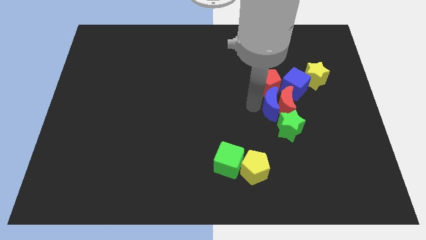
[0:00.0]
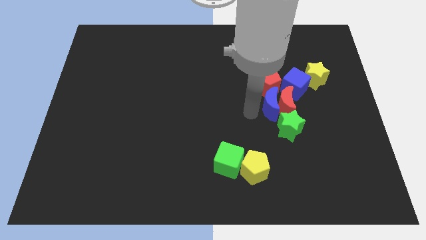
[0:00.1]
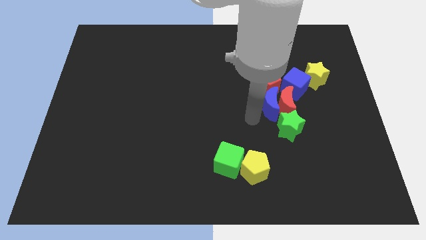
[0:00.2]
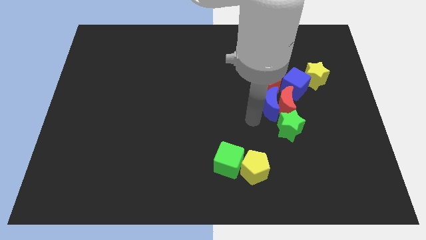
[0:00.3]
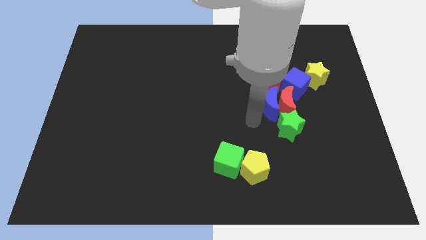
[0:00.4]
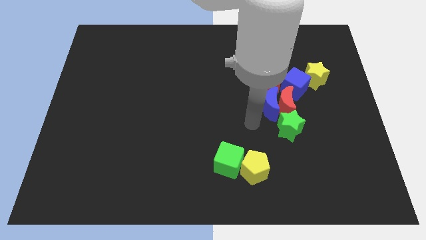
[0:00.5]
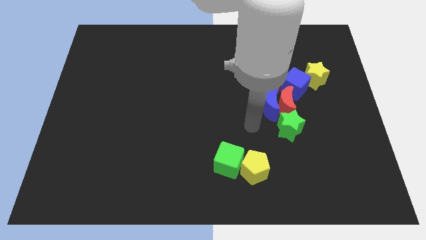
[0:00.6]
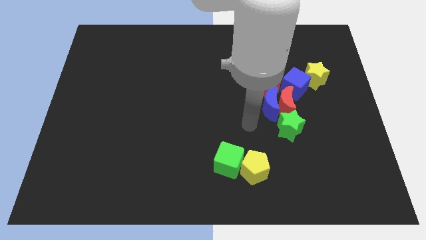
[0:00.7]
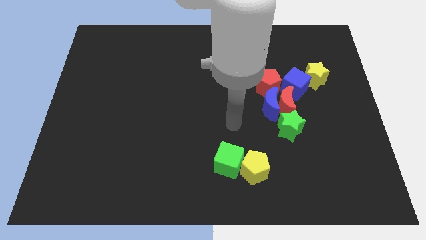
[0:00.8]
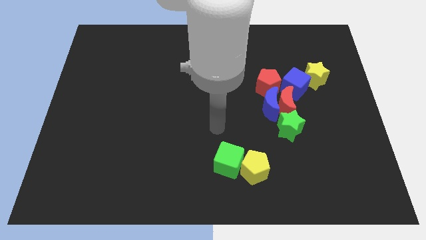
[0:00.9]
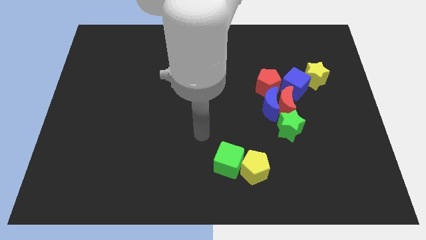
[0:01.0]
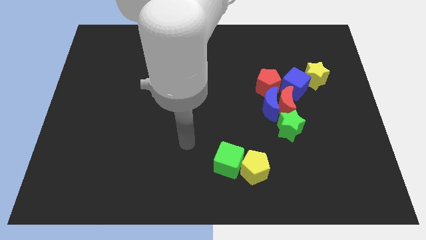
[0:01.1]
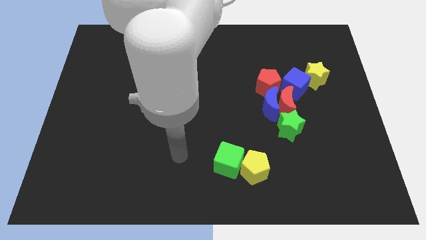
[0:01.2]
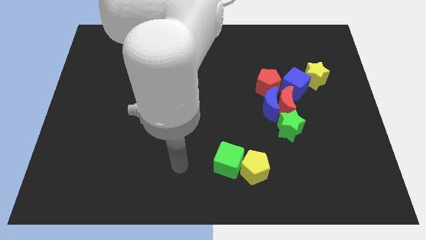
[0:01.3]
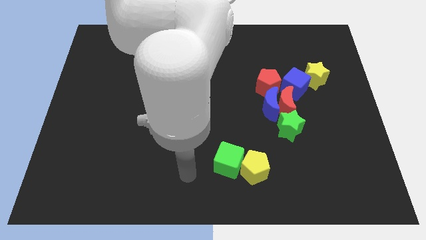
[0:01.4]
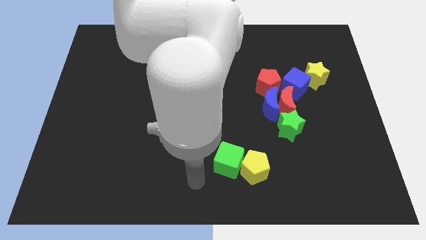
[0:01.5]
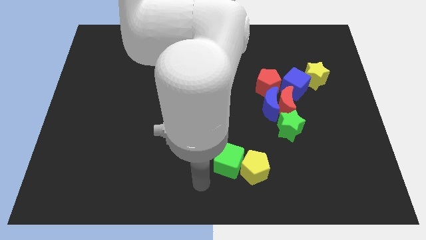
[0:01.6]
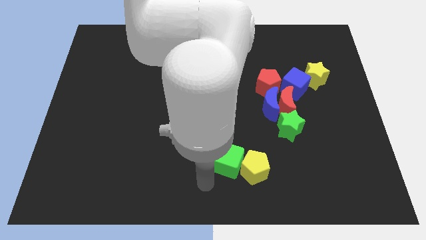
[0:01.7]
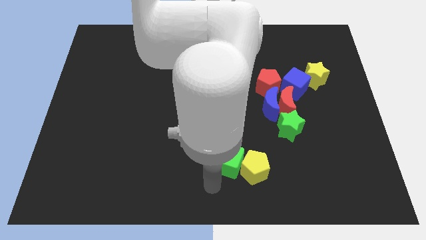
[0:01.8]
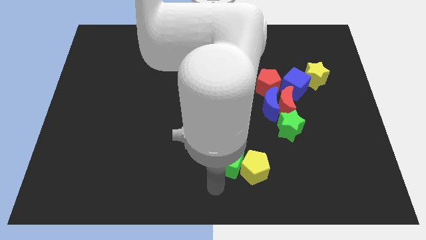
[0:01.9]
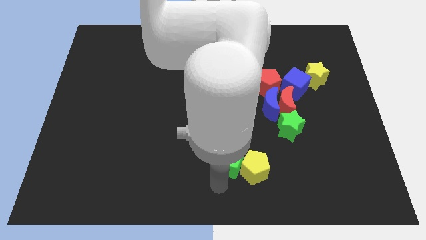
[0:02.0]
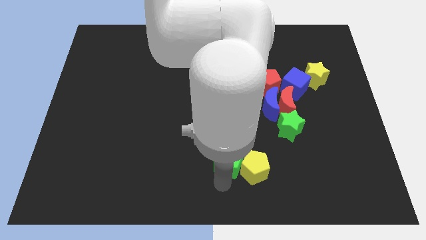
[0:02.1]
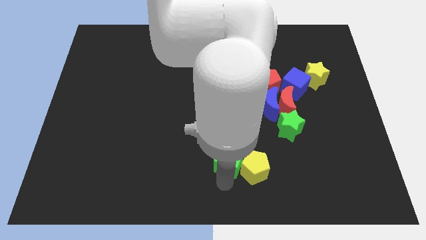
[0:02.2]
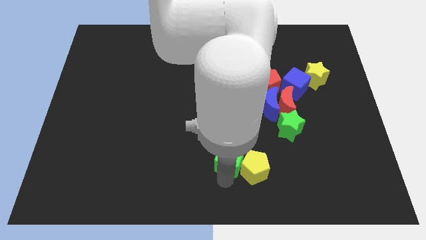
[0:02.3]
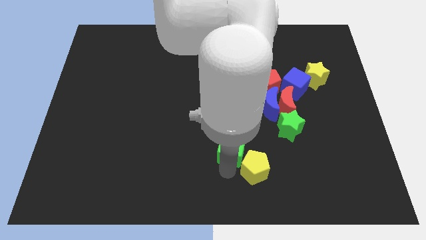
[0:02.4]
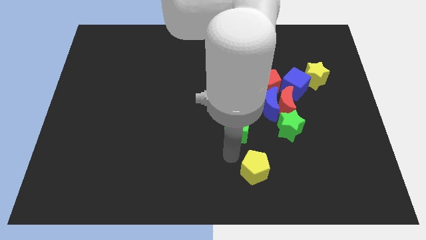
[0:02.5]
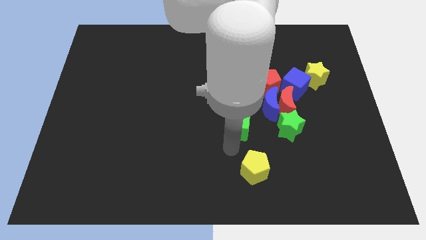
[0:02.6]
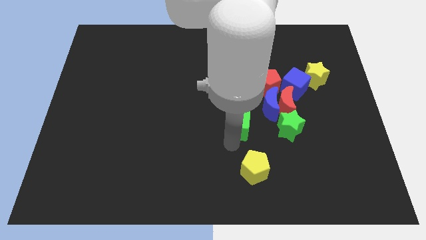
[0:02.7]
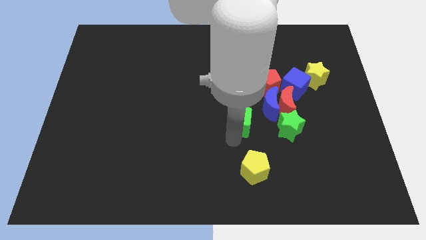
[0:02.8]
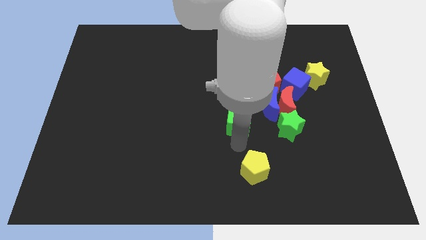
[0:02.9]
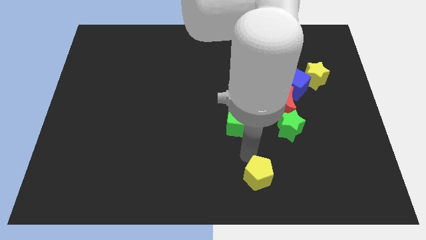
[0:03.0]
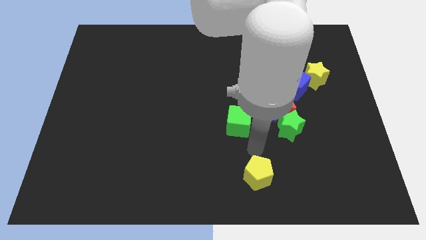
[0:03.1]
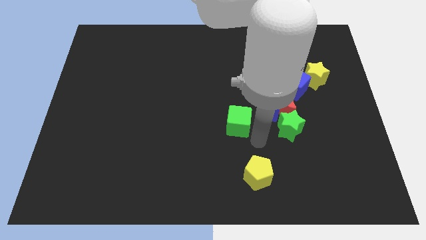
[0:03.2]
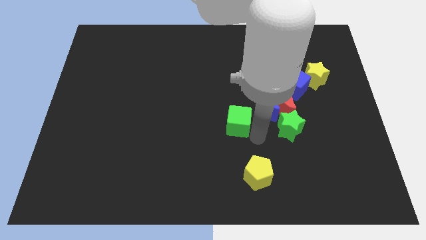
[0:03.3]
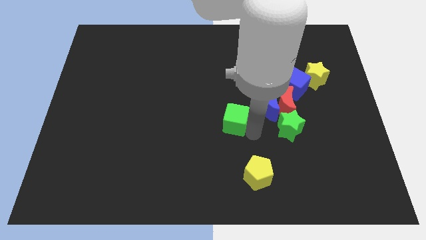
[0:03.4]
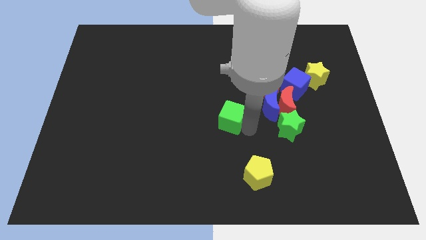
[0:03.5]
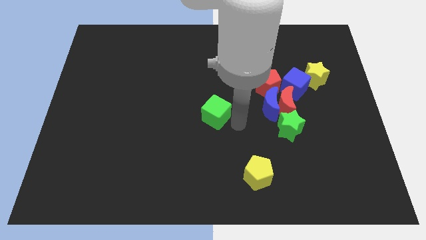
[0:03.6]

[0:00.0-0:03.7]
place the green cube to the left side of the green star

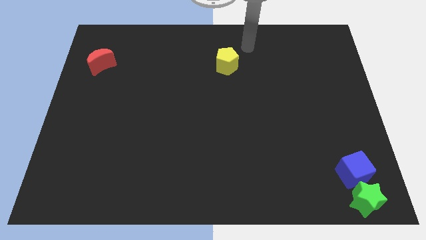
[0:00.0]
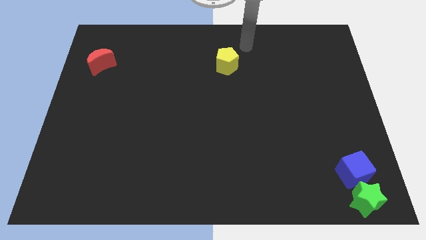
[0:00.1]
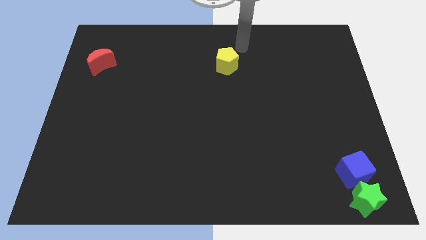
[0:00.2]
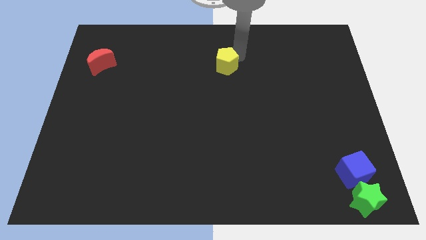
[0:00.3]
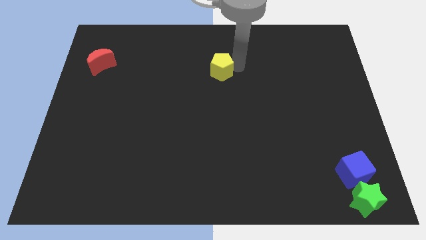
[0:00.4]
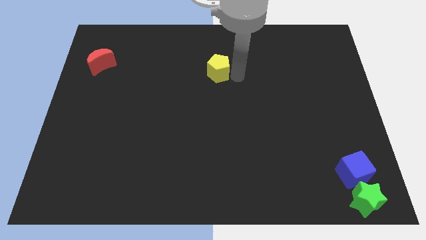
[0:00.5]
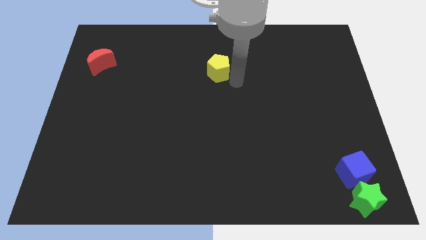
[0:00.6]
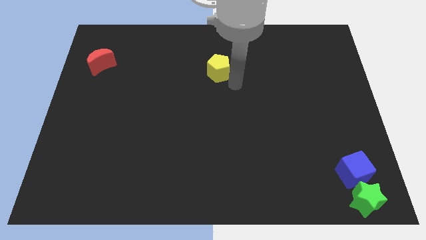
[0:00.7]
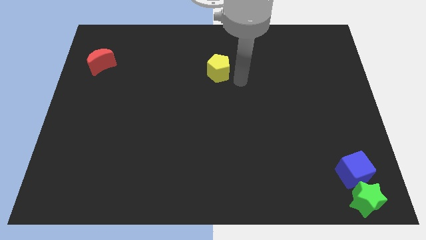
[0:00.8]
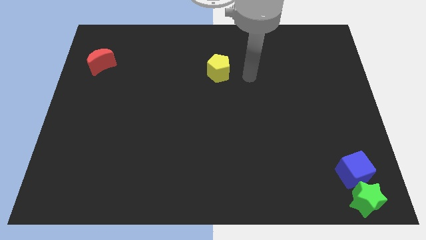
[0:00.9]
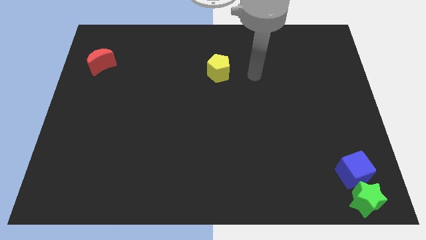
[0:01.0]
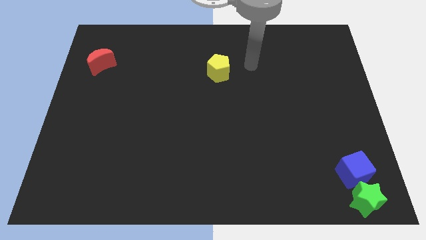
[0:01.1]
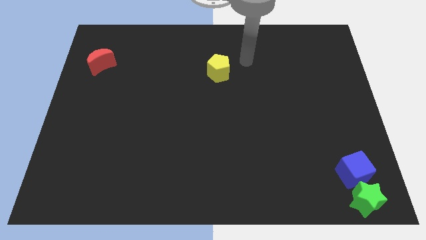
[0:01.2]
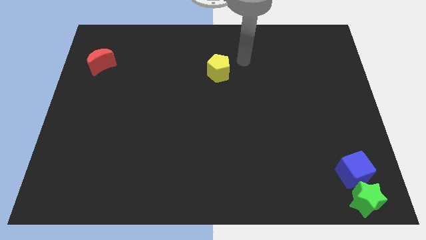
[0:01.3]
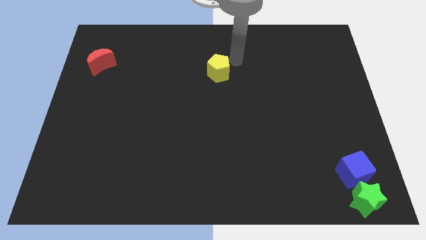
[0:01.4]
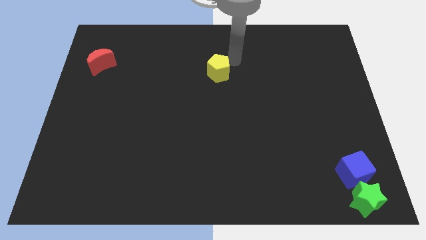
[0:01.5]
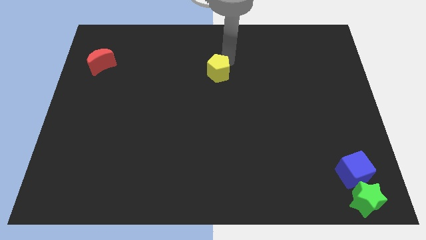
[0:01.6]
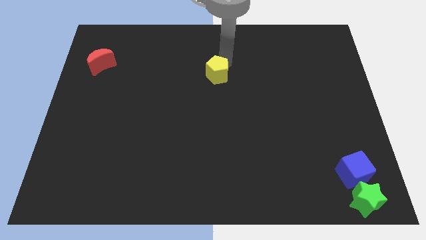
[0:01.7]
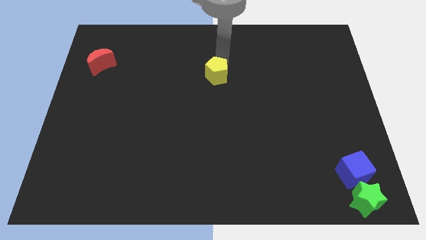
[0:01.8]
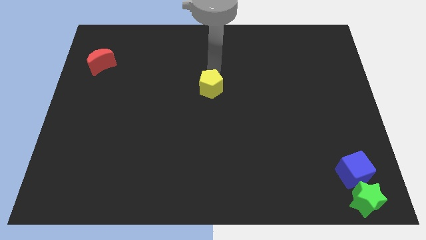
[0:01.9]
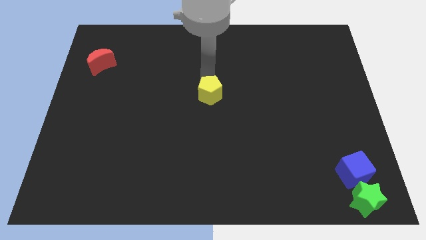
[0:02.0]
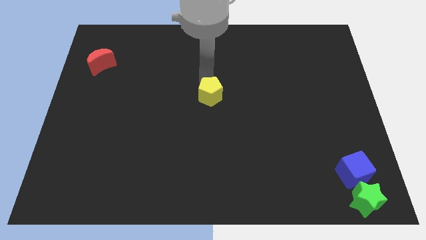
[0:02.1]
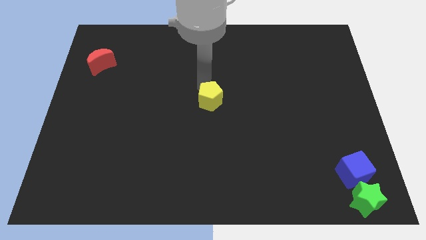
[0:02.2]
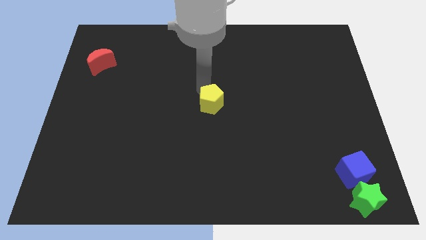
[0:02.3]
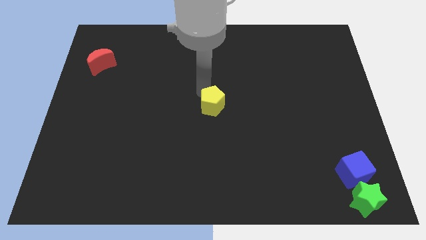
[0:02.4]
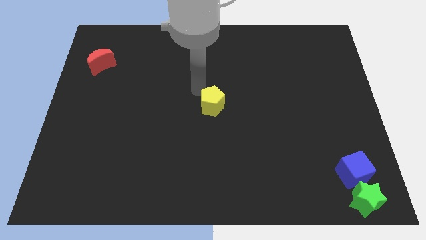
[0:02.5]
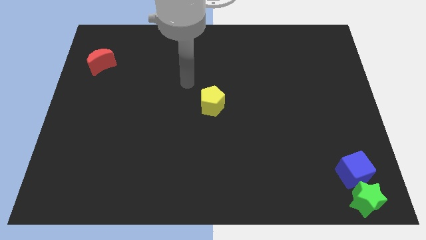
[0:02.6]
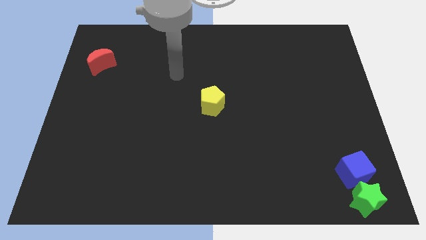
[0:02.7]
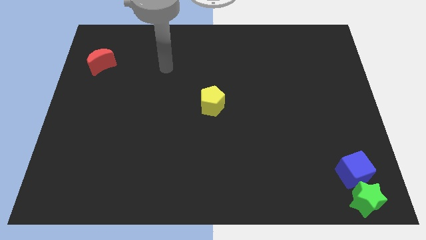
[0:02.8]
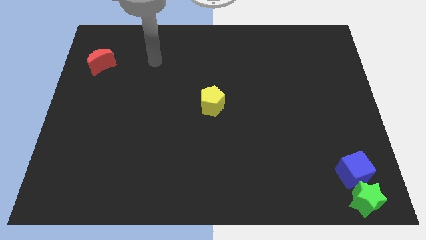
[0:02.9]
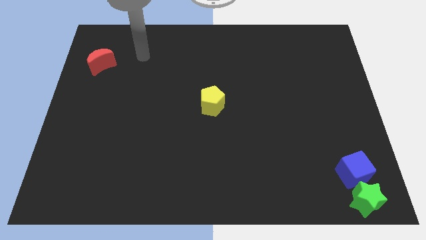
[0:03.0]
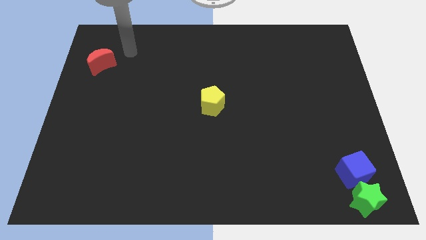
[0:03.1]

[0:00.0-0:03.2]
move yellow pentagon to the center of the board

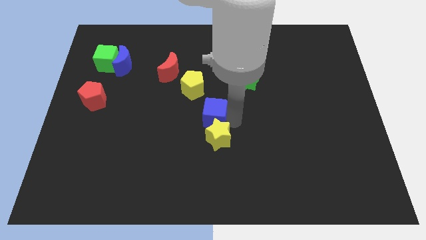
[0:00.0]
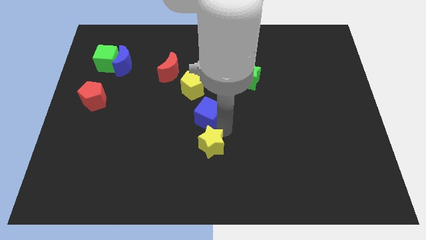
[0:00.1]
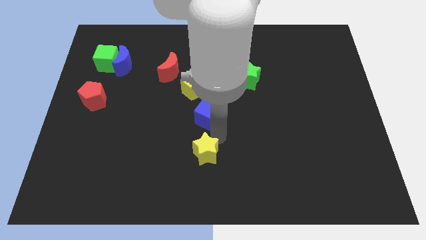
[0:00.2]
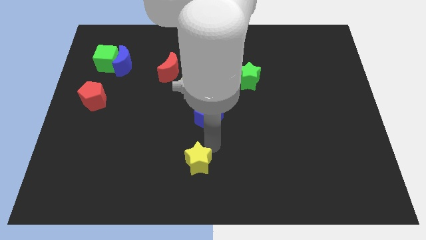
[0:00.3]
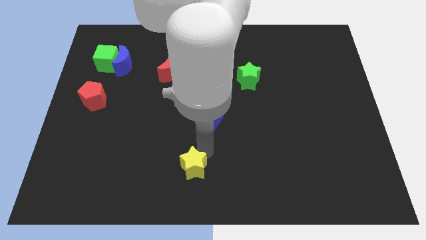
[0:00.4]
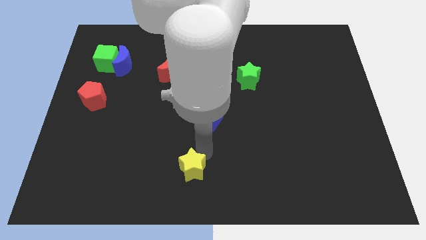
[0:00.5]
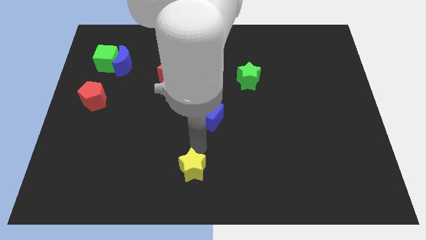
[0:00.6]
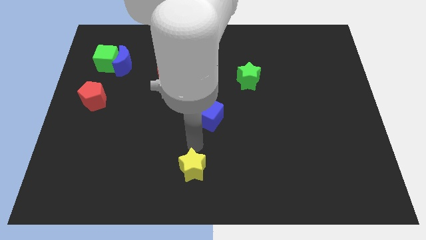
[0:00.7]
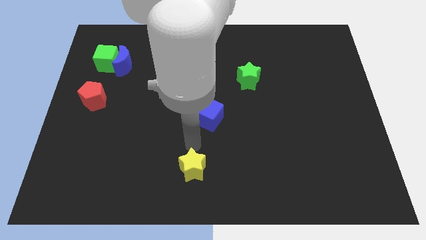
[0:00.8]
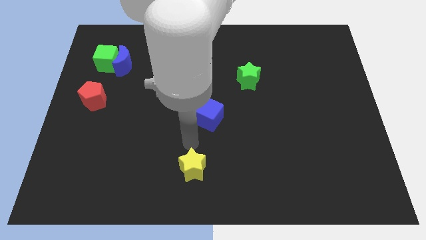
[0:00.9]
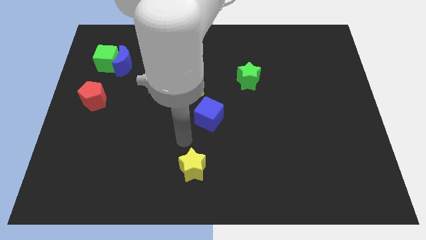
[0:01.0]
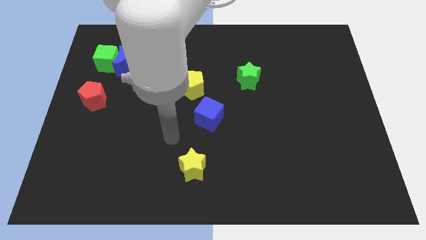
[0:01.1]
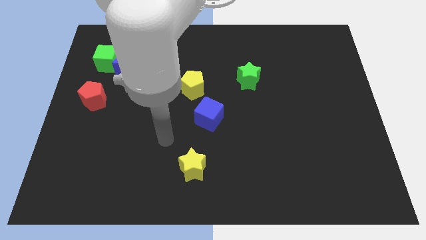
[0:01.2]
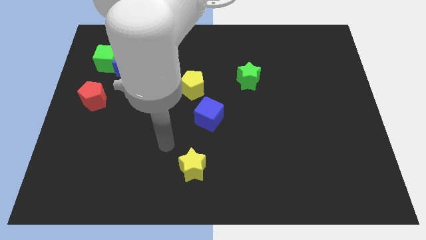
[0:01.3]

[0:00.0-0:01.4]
separate the yellow star from the blue cube

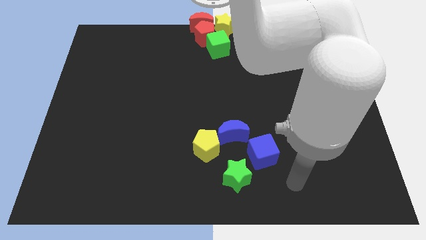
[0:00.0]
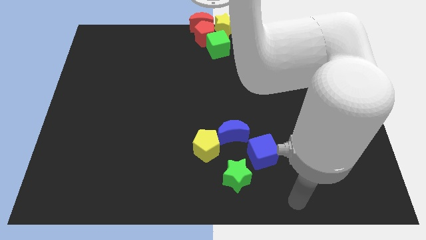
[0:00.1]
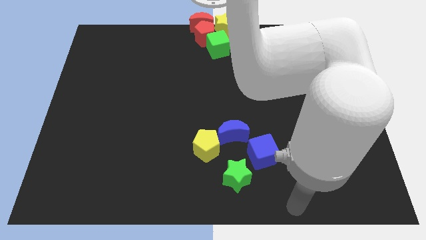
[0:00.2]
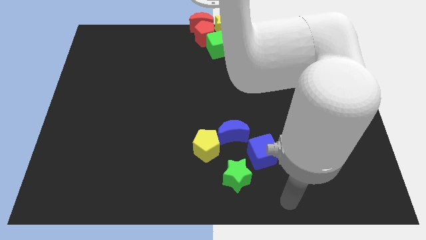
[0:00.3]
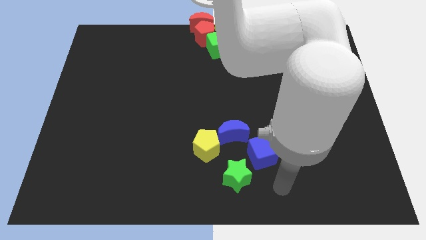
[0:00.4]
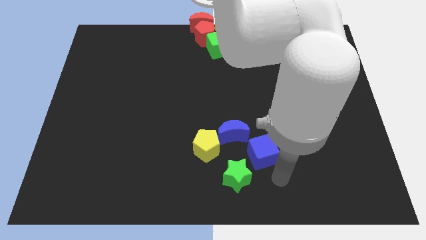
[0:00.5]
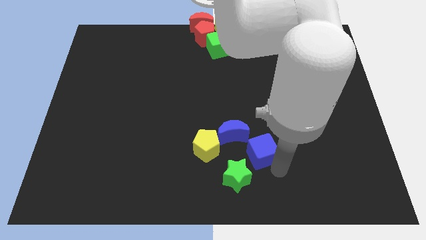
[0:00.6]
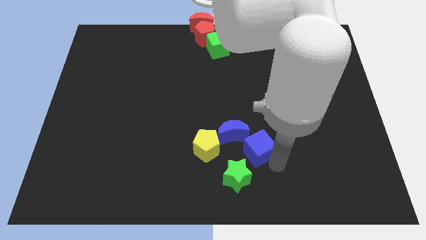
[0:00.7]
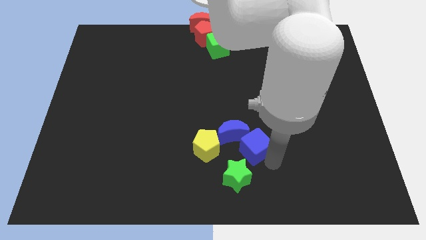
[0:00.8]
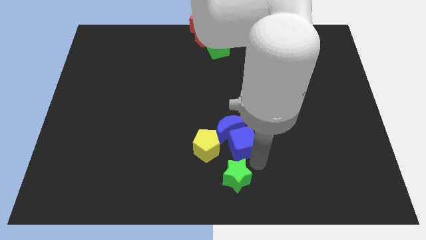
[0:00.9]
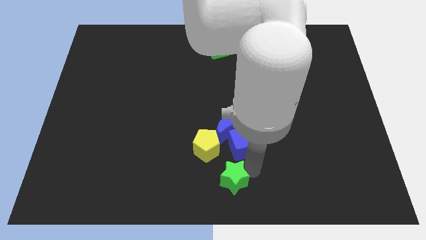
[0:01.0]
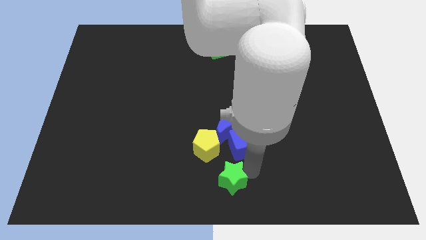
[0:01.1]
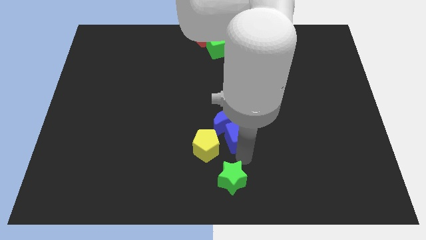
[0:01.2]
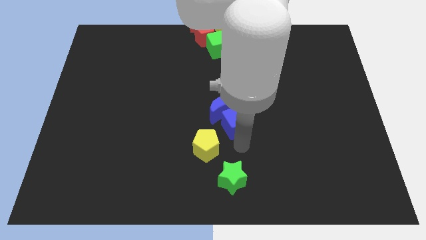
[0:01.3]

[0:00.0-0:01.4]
push the blue cube into the blue moon
